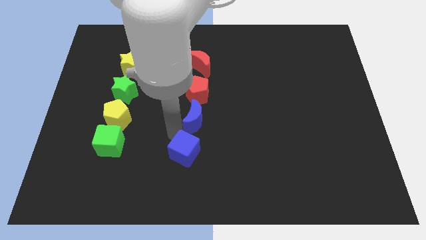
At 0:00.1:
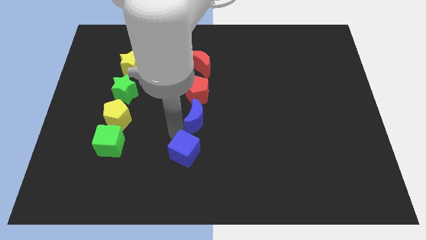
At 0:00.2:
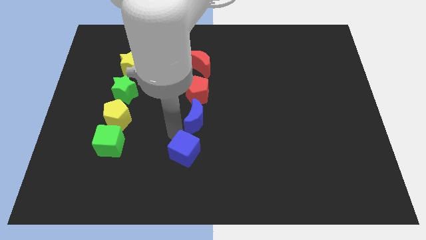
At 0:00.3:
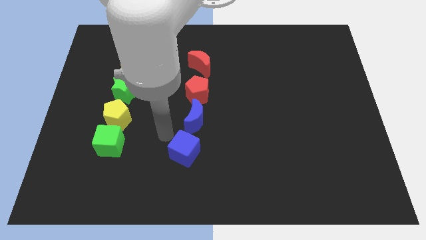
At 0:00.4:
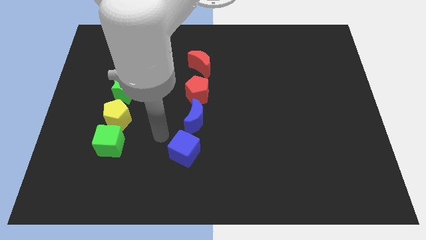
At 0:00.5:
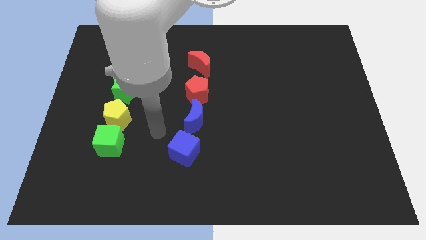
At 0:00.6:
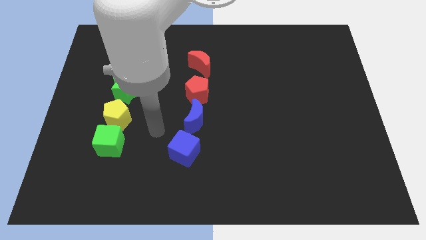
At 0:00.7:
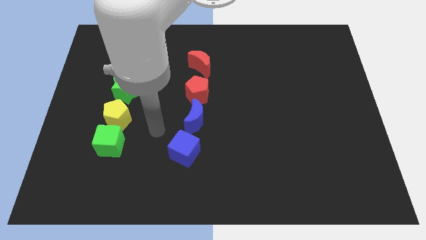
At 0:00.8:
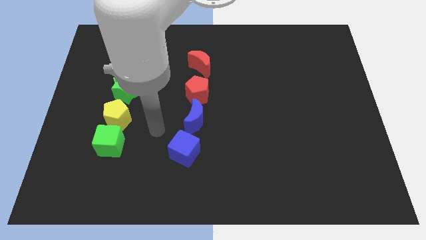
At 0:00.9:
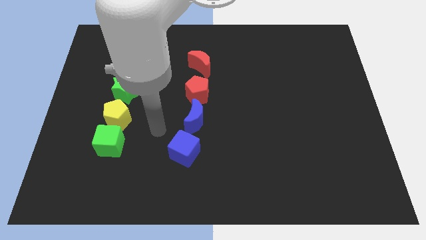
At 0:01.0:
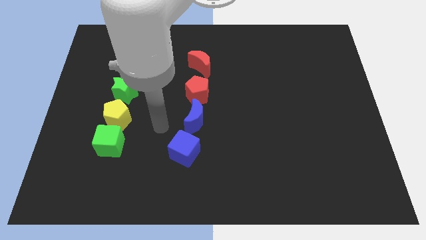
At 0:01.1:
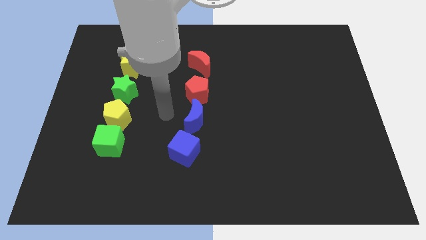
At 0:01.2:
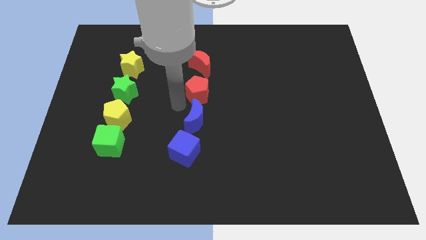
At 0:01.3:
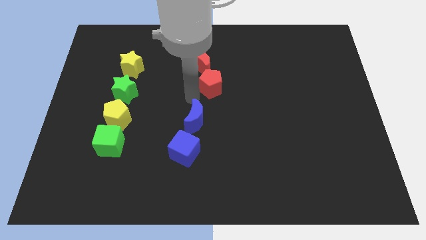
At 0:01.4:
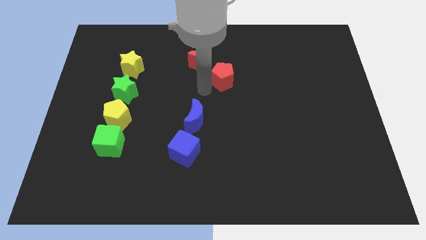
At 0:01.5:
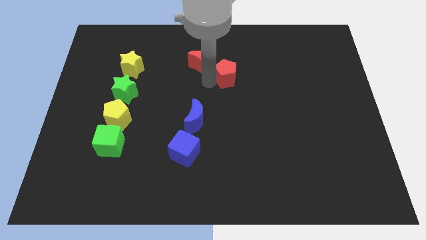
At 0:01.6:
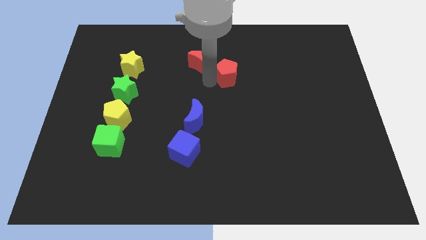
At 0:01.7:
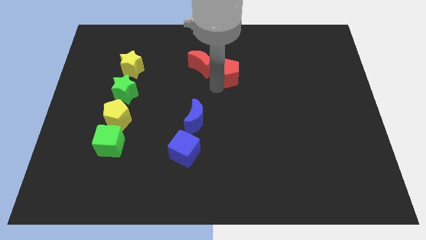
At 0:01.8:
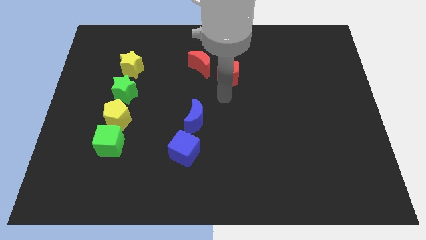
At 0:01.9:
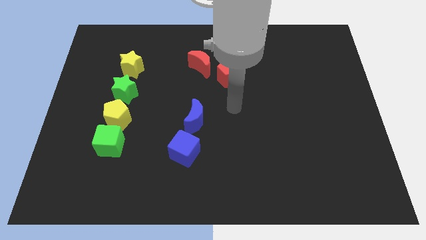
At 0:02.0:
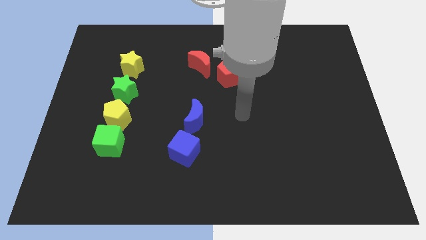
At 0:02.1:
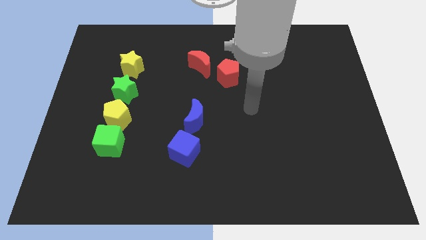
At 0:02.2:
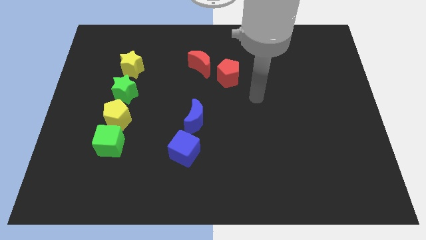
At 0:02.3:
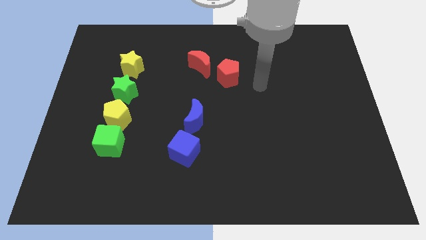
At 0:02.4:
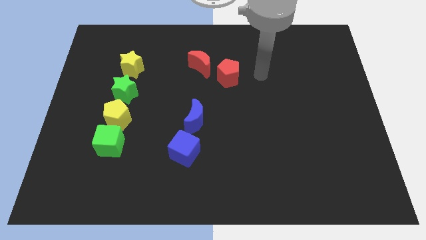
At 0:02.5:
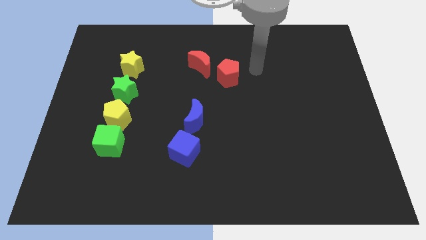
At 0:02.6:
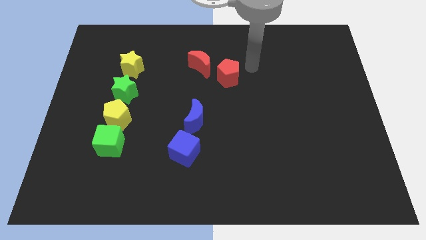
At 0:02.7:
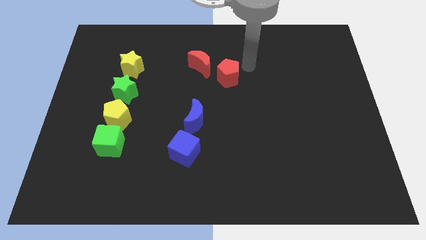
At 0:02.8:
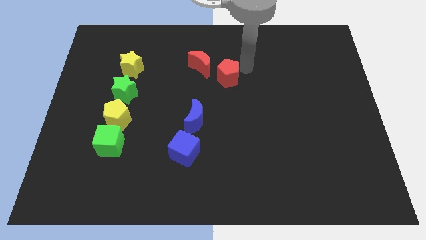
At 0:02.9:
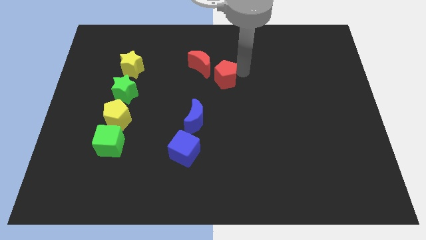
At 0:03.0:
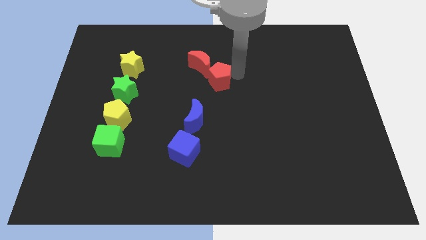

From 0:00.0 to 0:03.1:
push the red pentagon diagonally bottom right to the red moon

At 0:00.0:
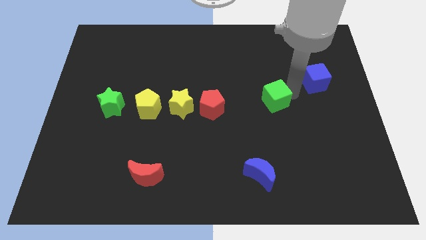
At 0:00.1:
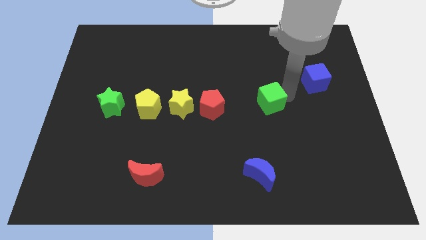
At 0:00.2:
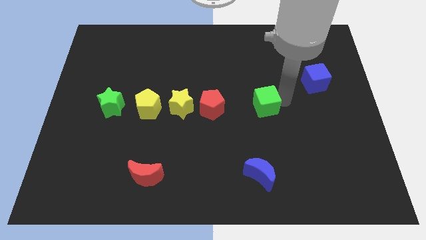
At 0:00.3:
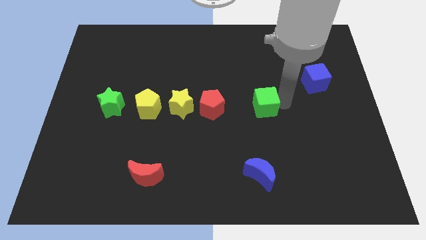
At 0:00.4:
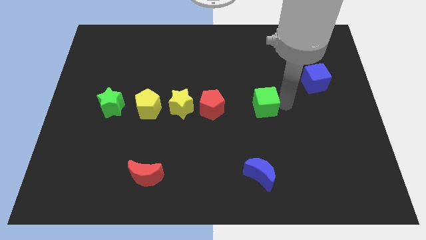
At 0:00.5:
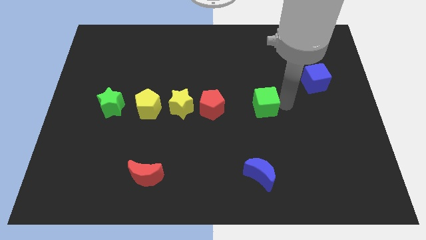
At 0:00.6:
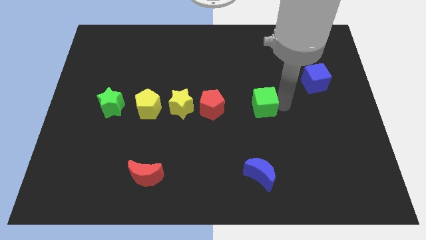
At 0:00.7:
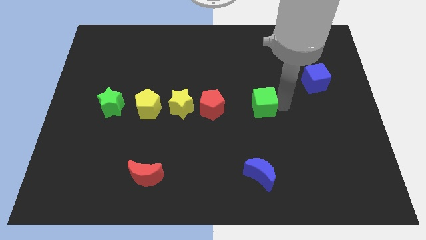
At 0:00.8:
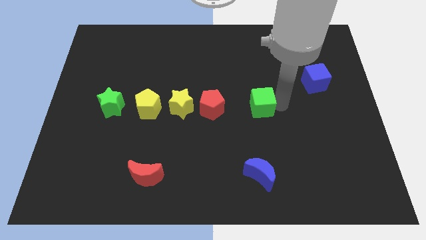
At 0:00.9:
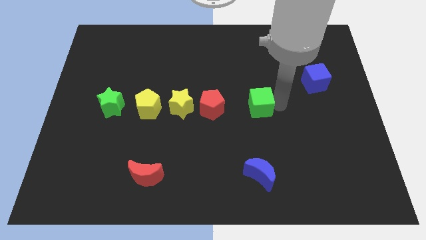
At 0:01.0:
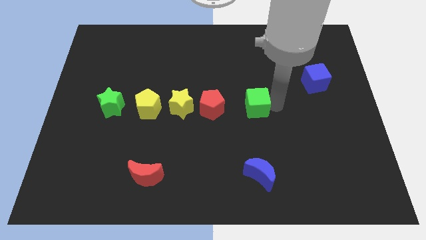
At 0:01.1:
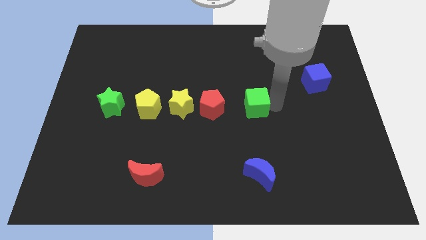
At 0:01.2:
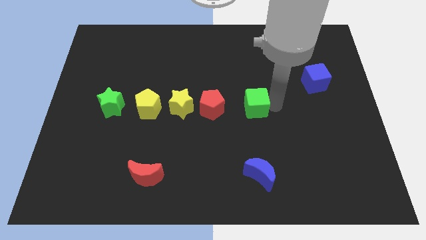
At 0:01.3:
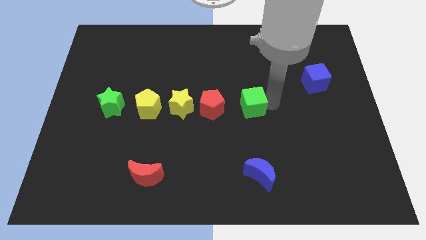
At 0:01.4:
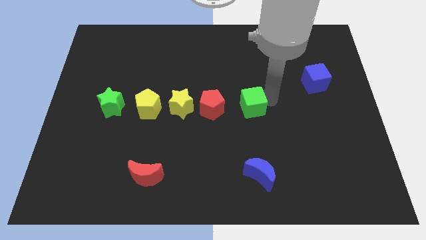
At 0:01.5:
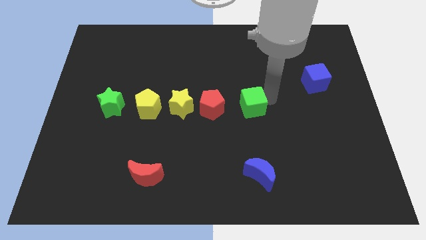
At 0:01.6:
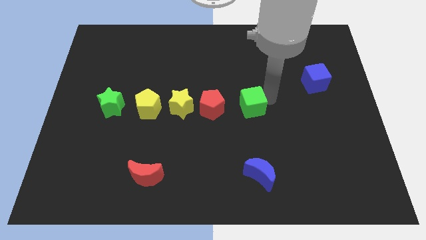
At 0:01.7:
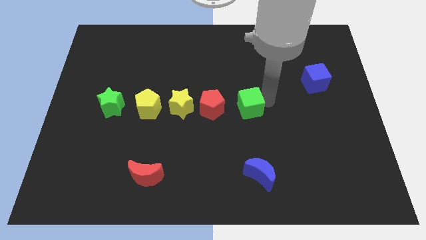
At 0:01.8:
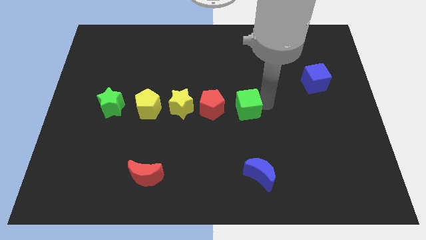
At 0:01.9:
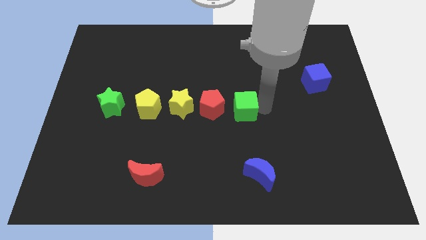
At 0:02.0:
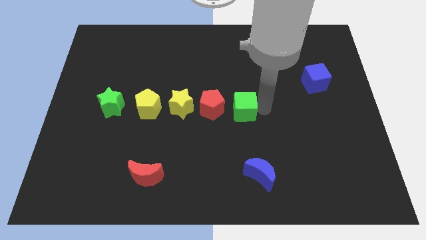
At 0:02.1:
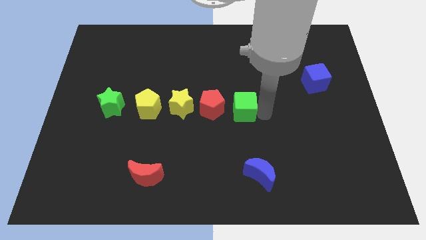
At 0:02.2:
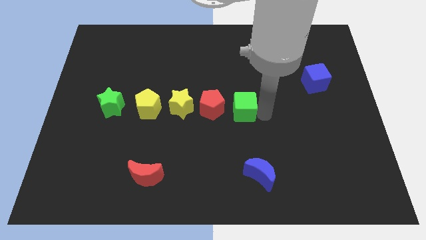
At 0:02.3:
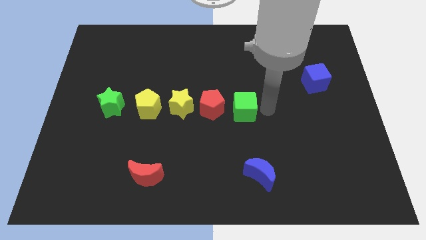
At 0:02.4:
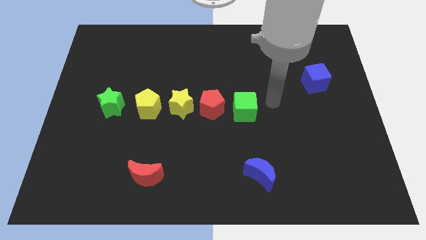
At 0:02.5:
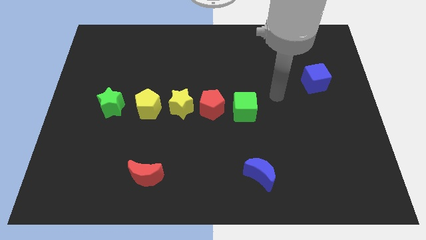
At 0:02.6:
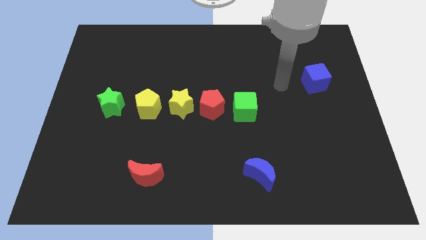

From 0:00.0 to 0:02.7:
move green cube beside red pentagon

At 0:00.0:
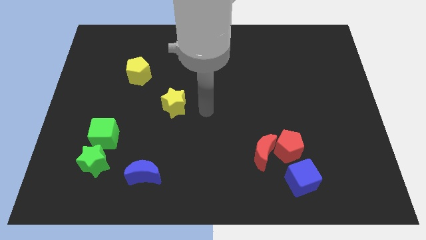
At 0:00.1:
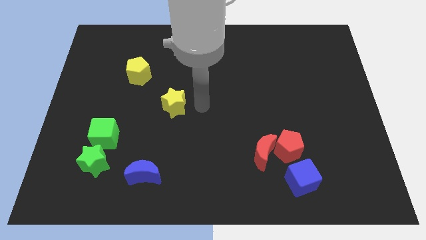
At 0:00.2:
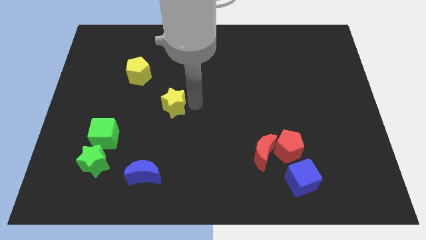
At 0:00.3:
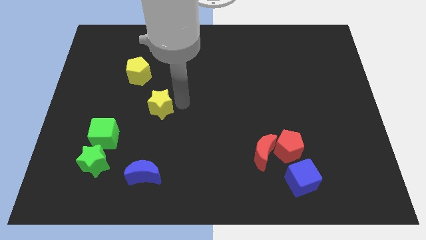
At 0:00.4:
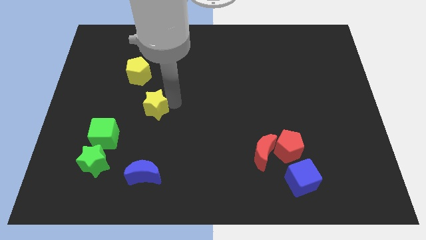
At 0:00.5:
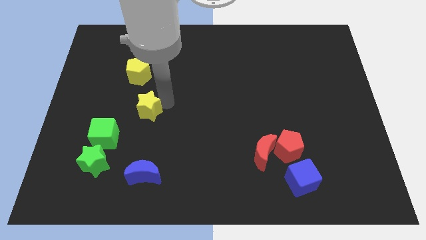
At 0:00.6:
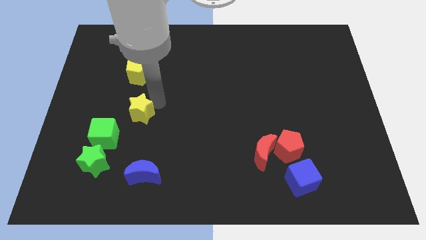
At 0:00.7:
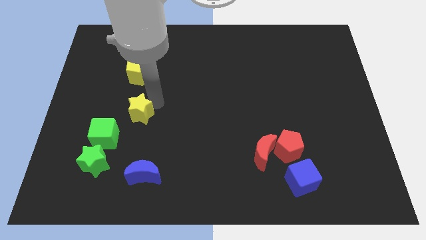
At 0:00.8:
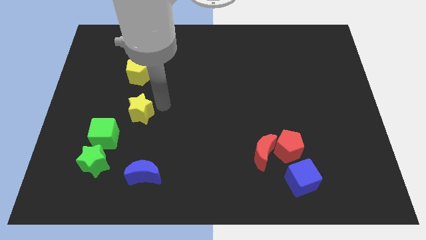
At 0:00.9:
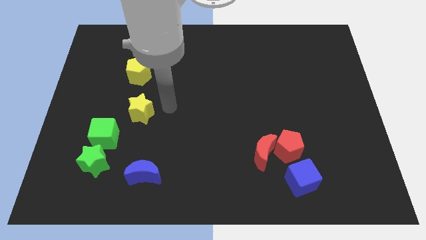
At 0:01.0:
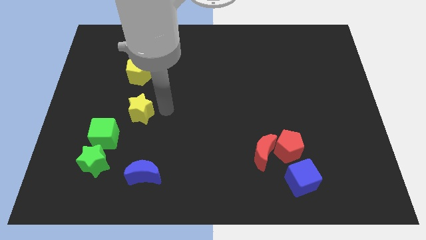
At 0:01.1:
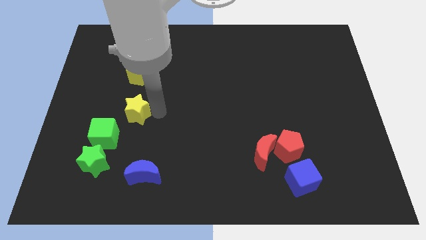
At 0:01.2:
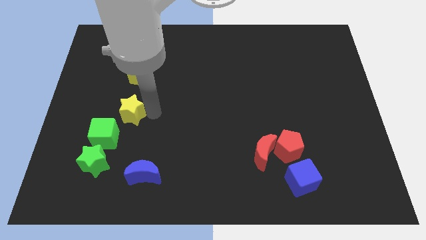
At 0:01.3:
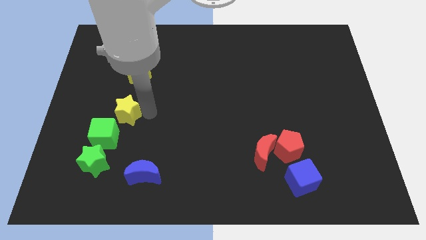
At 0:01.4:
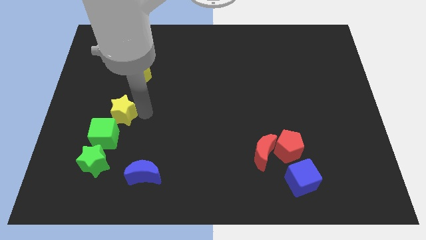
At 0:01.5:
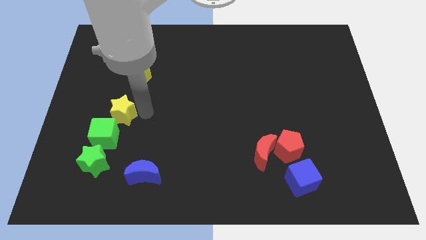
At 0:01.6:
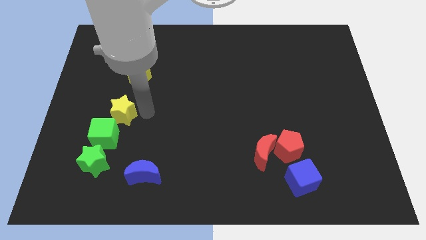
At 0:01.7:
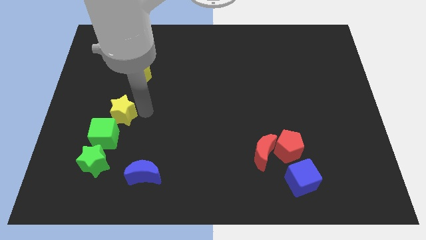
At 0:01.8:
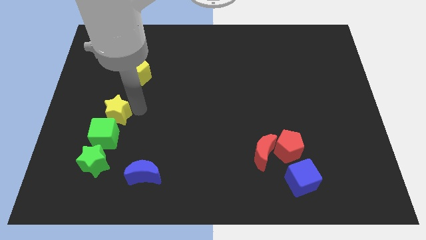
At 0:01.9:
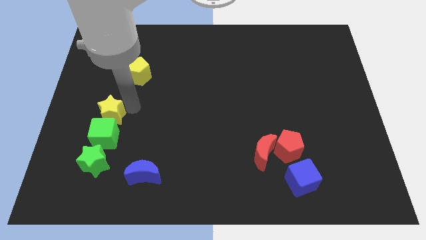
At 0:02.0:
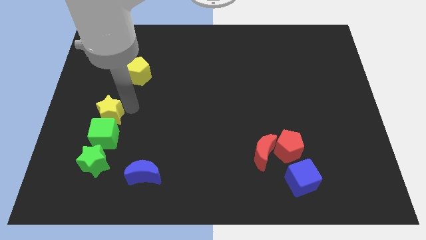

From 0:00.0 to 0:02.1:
move yellow star on top of green cube

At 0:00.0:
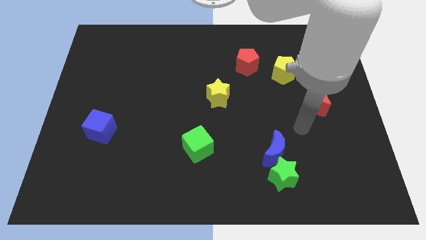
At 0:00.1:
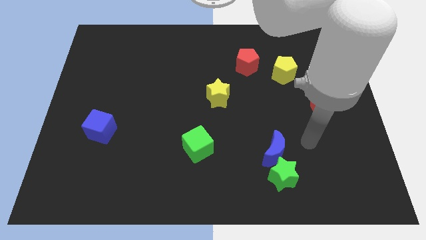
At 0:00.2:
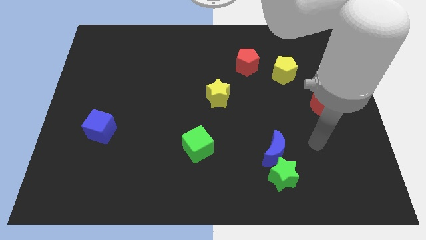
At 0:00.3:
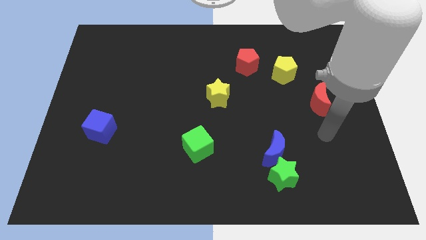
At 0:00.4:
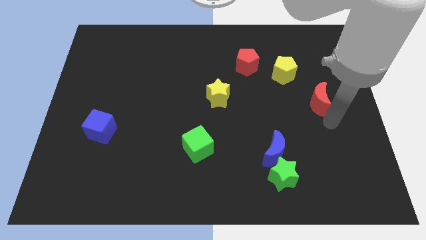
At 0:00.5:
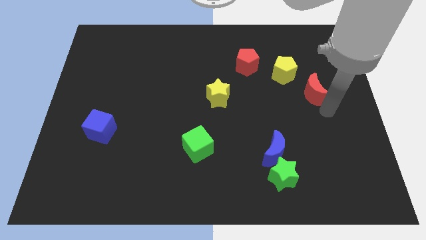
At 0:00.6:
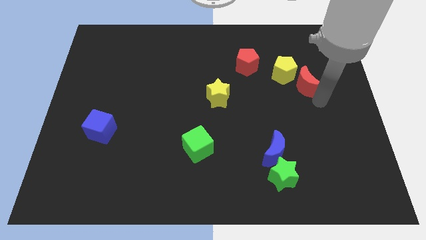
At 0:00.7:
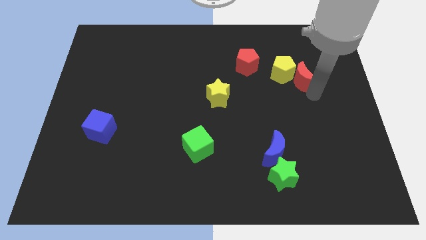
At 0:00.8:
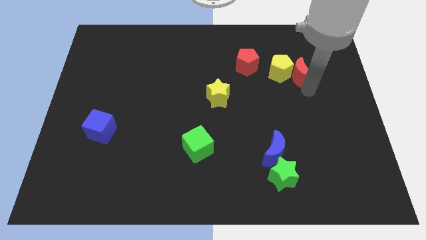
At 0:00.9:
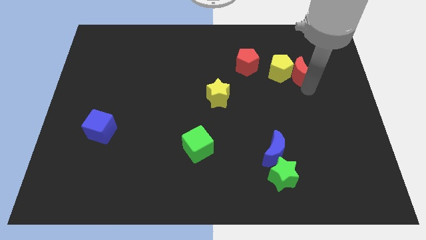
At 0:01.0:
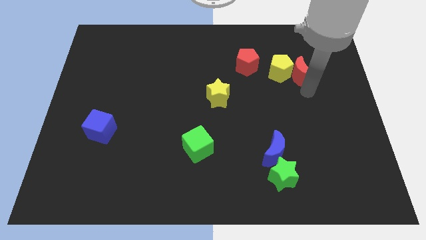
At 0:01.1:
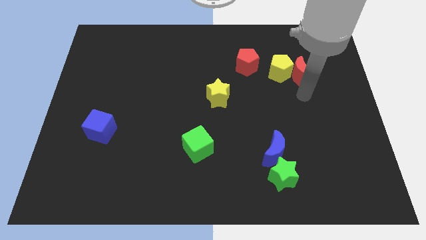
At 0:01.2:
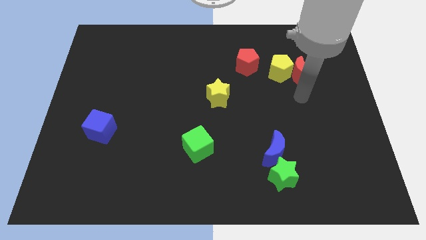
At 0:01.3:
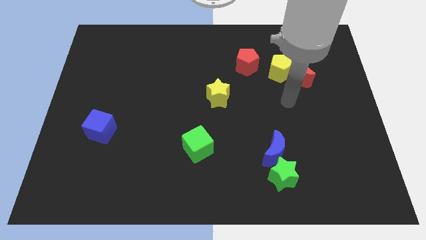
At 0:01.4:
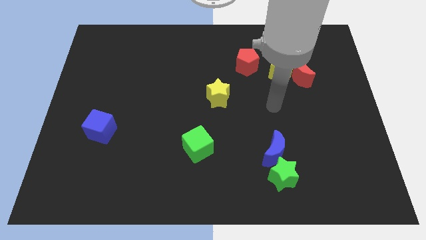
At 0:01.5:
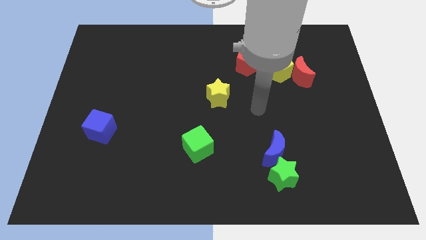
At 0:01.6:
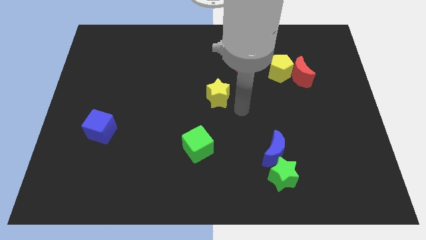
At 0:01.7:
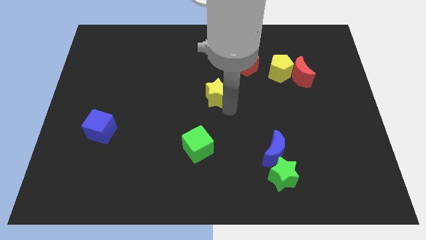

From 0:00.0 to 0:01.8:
move the red crescent towards the right side of the yellow pentagon
